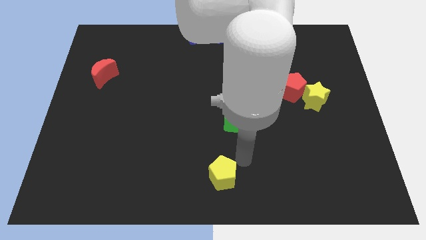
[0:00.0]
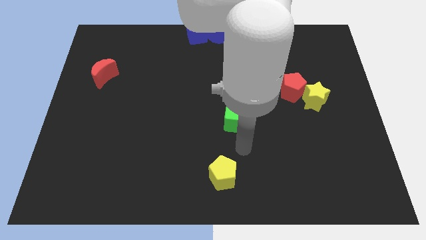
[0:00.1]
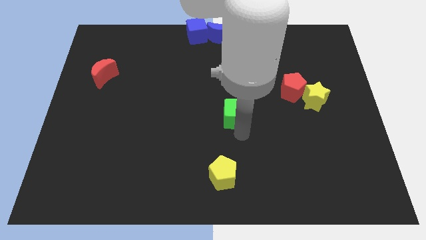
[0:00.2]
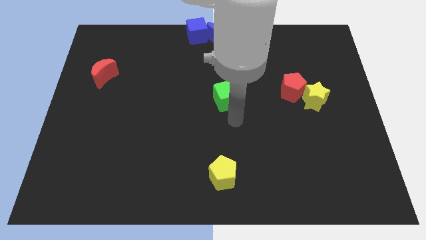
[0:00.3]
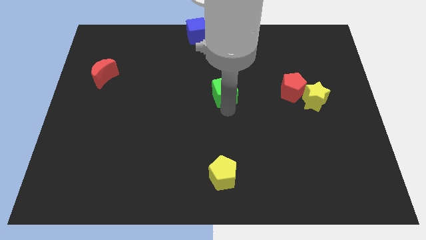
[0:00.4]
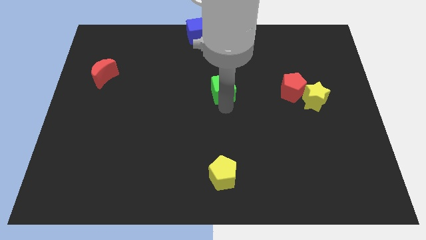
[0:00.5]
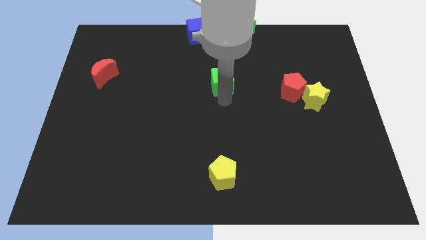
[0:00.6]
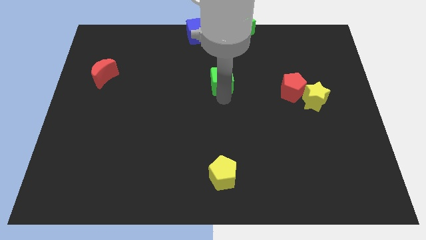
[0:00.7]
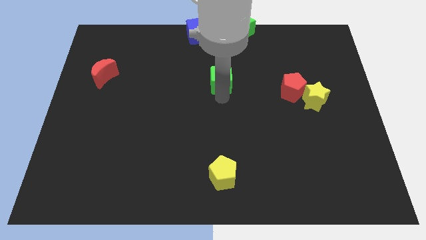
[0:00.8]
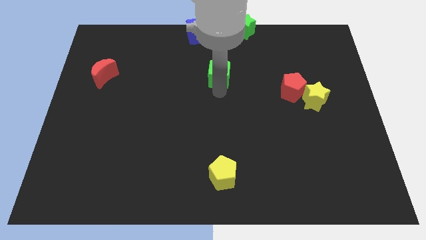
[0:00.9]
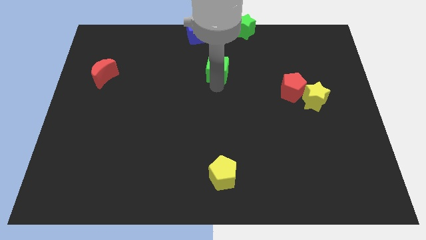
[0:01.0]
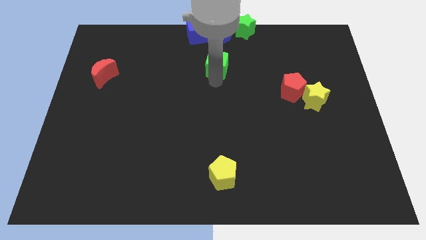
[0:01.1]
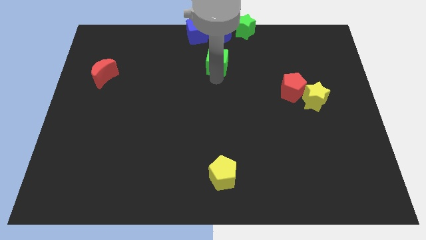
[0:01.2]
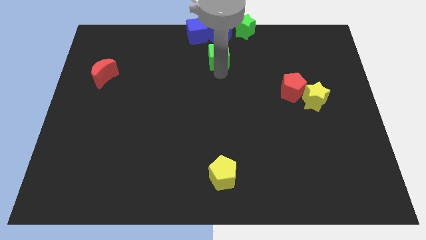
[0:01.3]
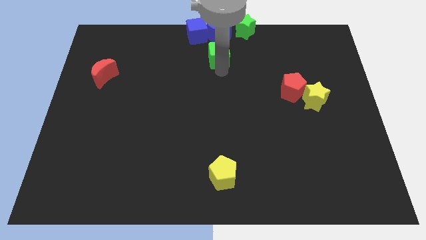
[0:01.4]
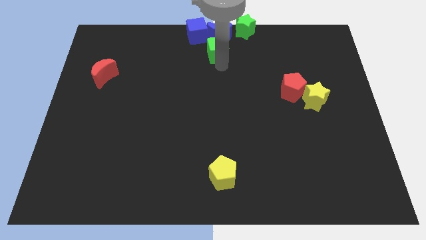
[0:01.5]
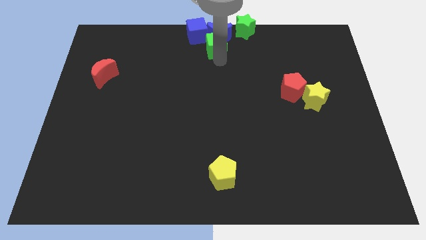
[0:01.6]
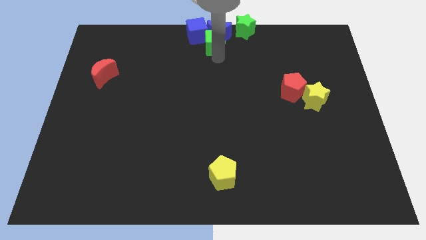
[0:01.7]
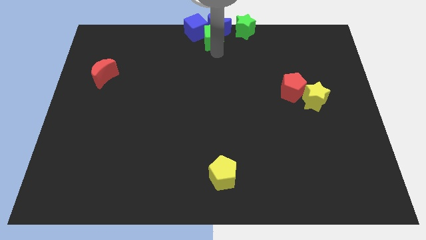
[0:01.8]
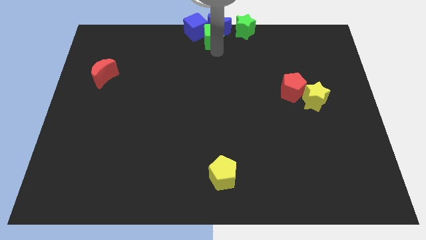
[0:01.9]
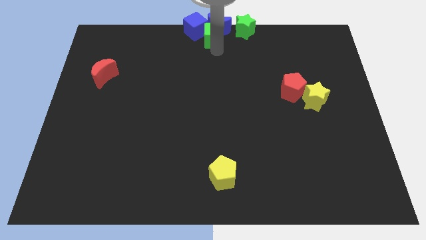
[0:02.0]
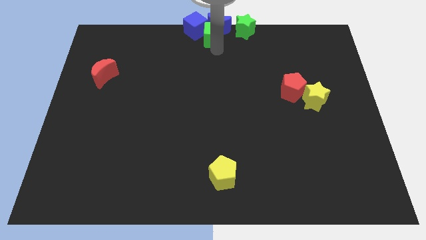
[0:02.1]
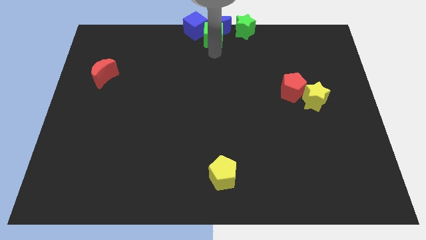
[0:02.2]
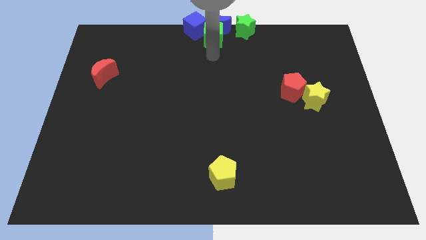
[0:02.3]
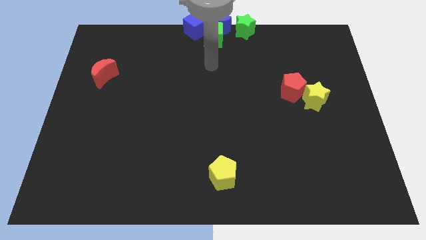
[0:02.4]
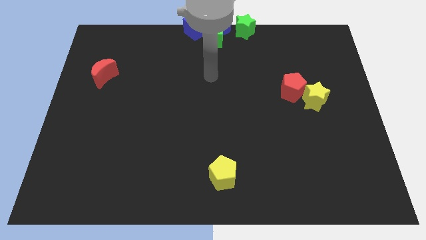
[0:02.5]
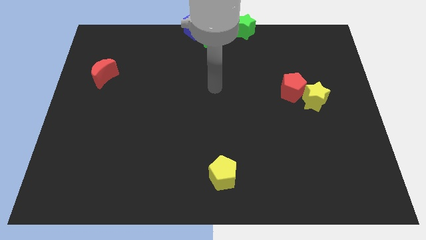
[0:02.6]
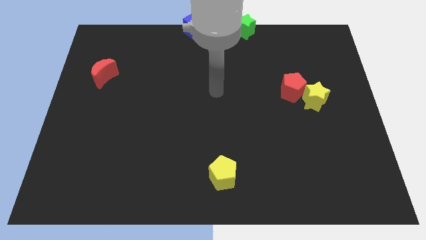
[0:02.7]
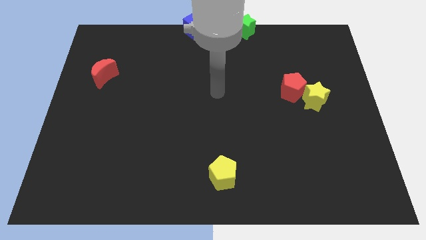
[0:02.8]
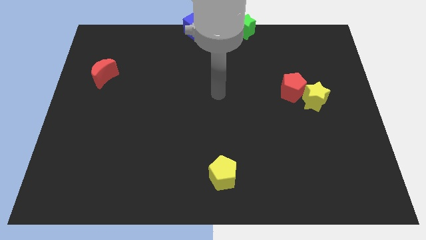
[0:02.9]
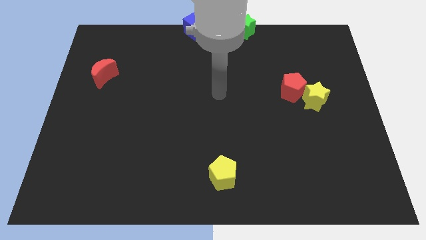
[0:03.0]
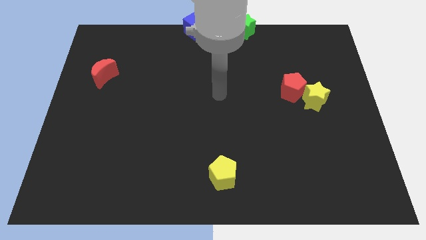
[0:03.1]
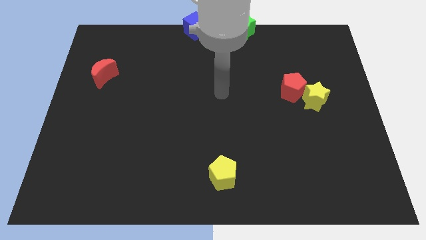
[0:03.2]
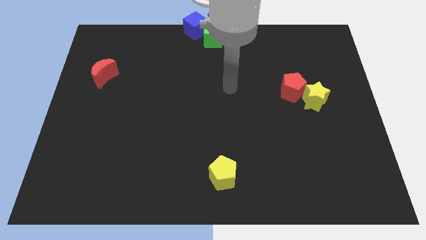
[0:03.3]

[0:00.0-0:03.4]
push the green cube into the blue blocks

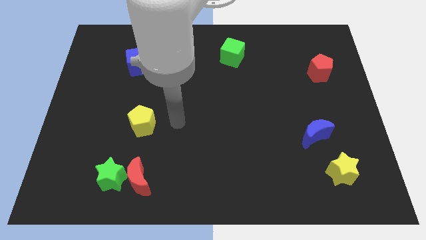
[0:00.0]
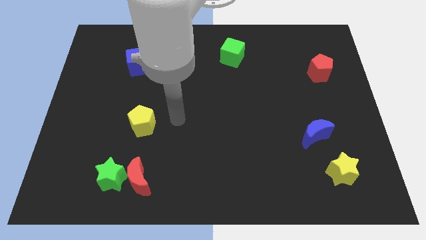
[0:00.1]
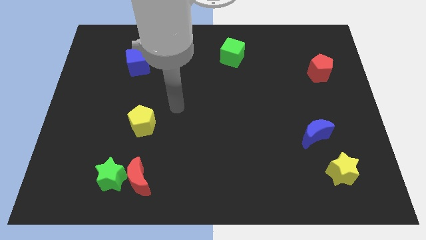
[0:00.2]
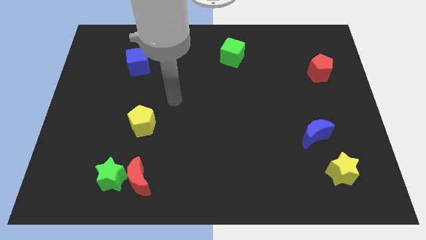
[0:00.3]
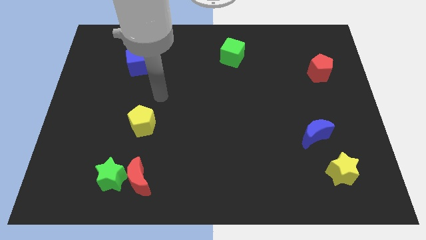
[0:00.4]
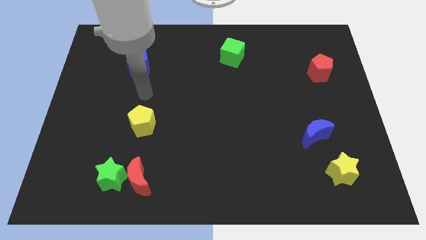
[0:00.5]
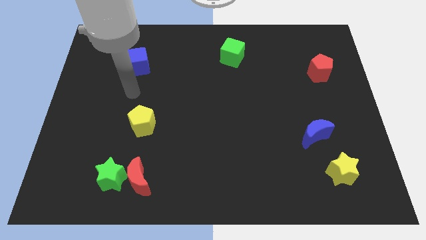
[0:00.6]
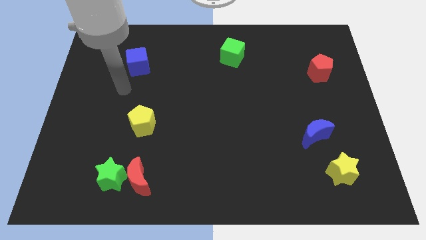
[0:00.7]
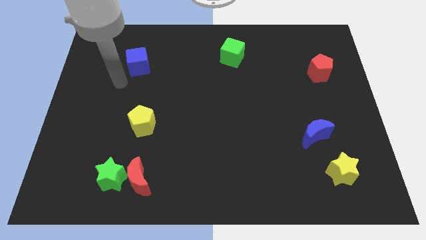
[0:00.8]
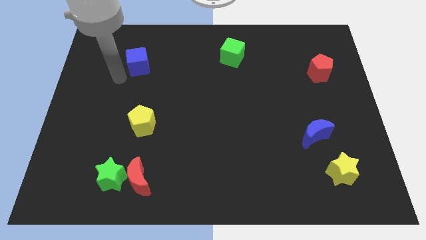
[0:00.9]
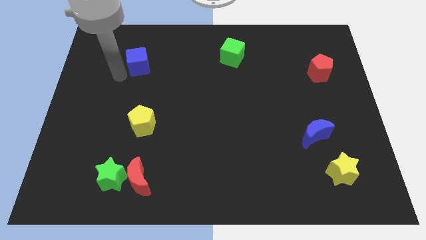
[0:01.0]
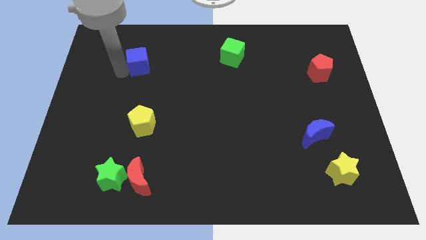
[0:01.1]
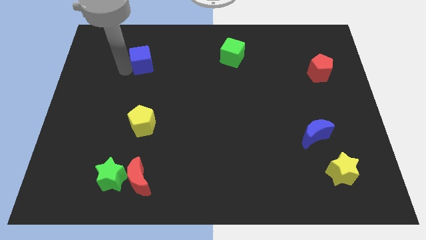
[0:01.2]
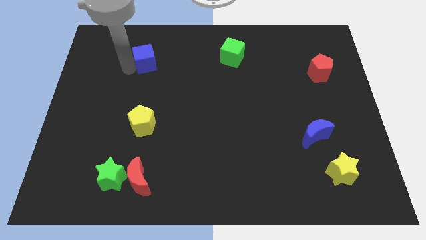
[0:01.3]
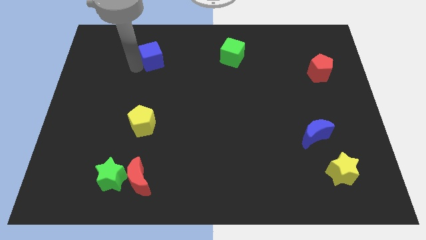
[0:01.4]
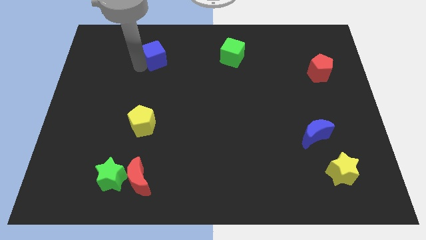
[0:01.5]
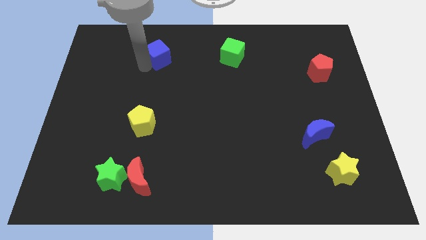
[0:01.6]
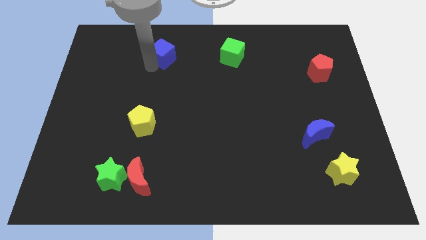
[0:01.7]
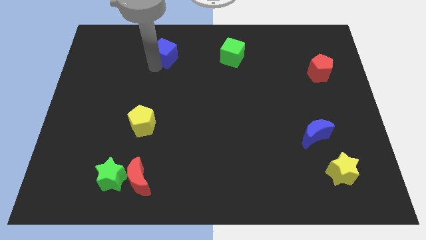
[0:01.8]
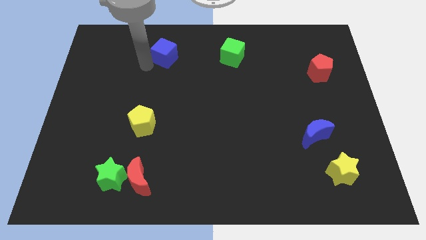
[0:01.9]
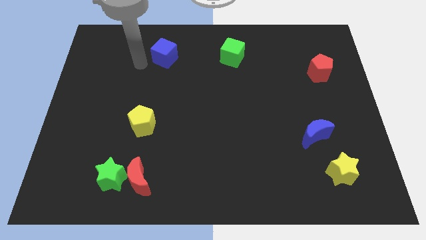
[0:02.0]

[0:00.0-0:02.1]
move the blue cube horizontally at the left side of the green cube

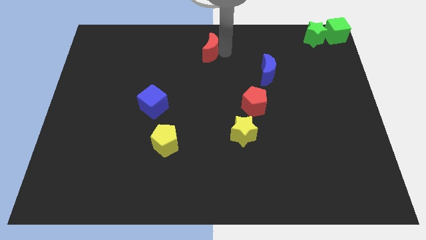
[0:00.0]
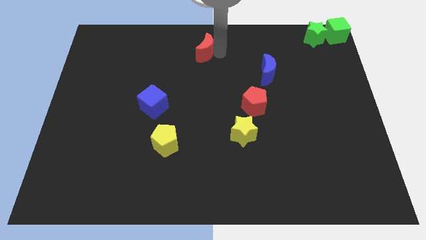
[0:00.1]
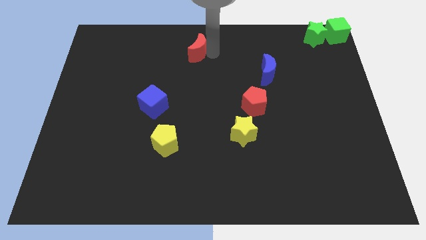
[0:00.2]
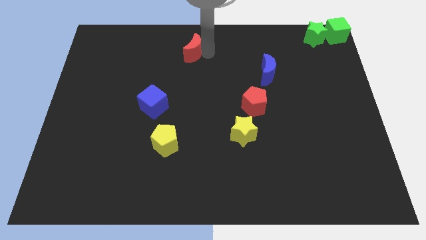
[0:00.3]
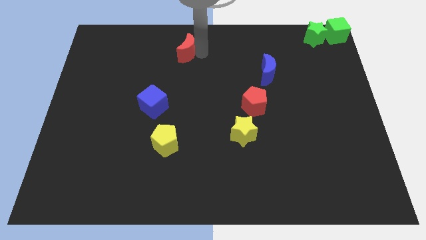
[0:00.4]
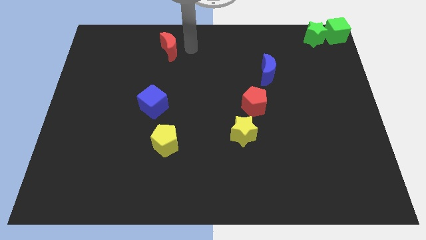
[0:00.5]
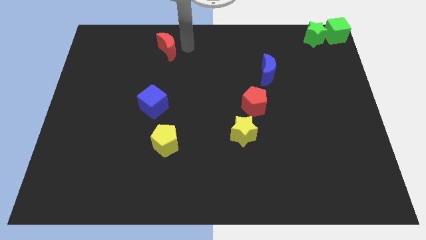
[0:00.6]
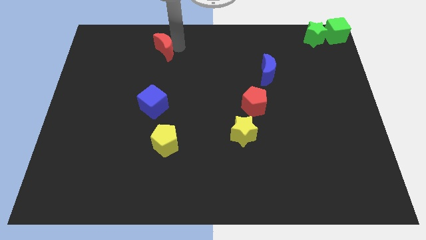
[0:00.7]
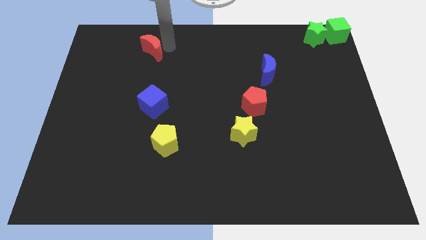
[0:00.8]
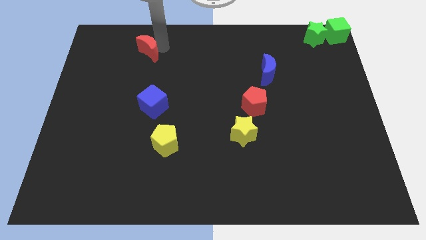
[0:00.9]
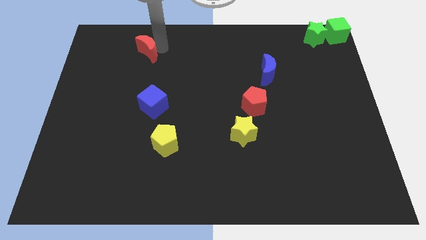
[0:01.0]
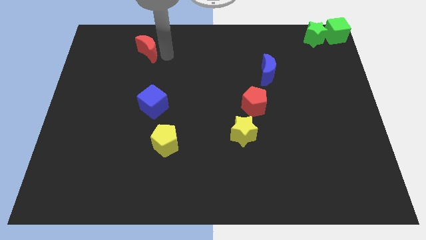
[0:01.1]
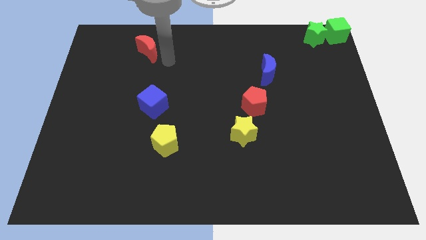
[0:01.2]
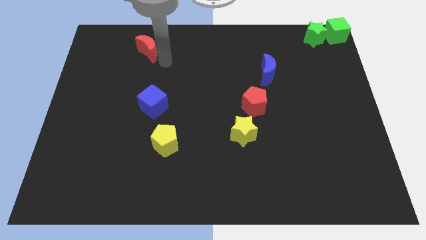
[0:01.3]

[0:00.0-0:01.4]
move the red crescent parallel to the top of the blue cube

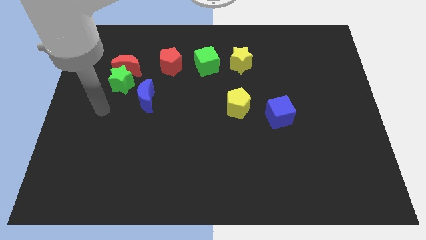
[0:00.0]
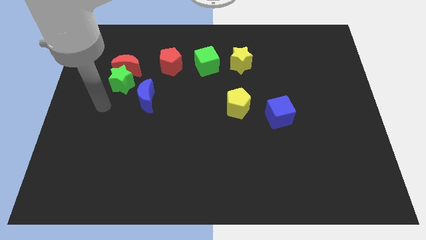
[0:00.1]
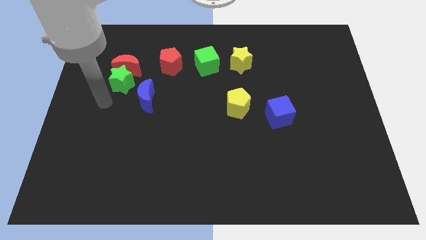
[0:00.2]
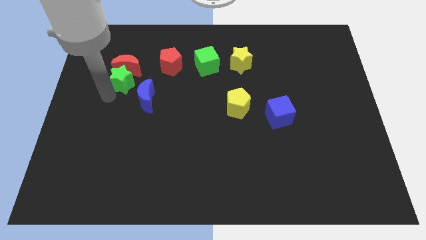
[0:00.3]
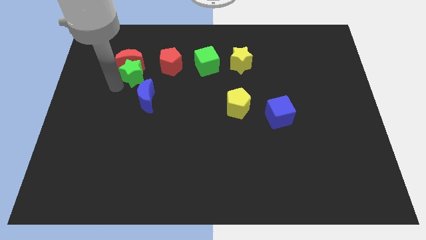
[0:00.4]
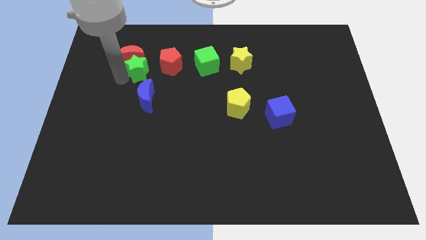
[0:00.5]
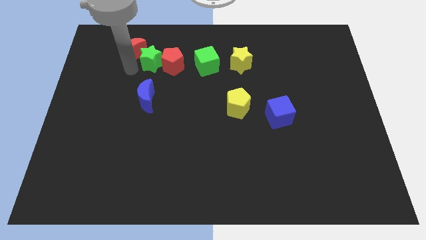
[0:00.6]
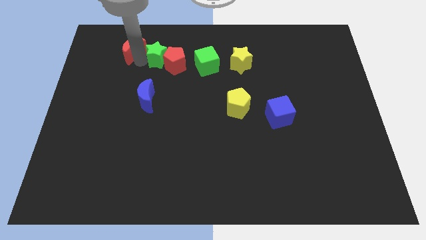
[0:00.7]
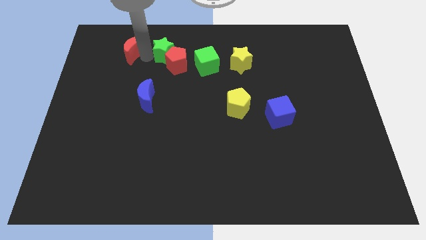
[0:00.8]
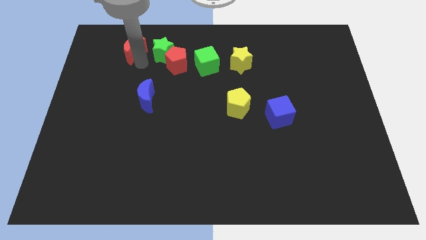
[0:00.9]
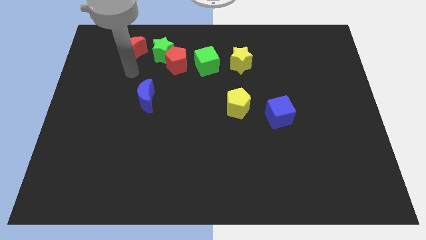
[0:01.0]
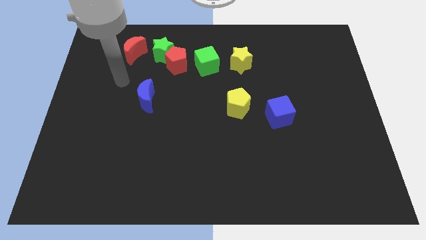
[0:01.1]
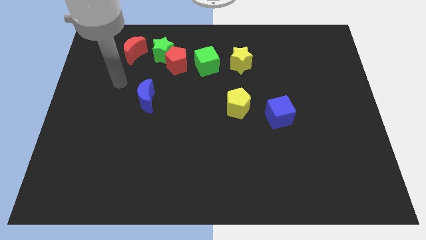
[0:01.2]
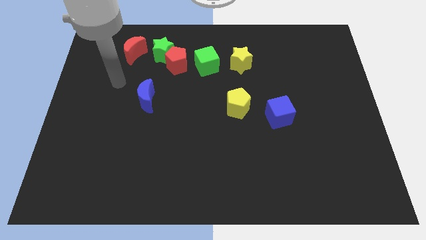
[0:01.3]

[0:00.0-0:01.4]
push the green star slightly towards the top side of the red pentagon

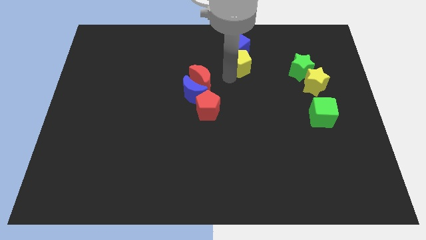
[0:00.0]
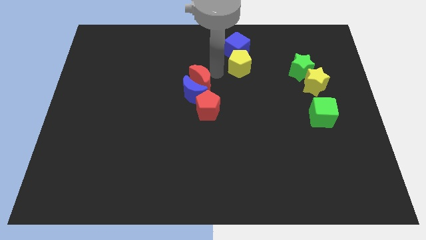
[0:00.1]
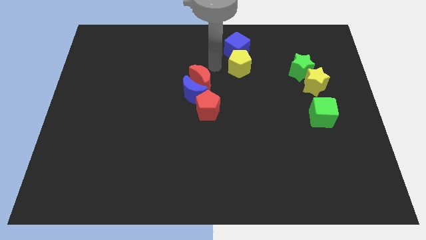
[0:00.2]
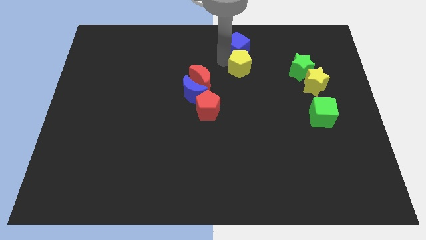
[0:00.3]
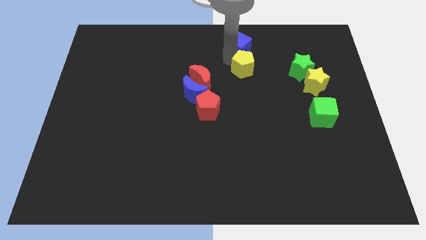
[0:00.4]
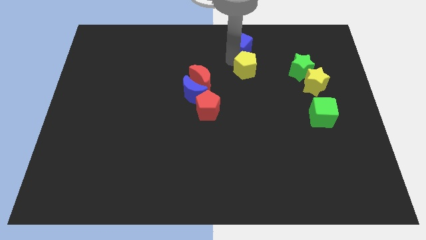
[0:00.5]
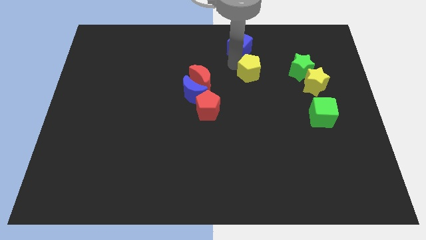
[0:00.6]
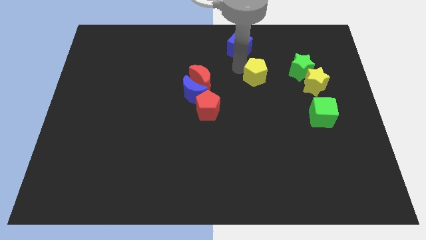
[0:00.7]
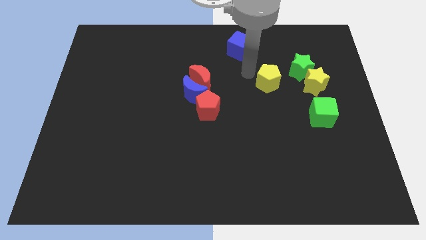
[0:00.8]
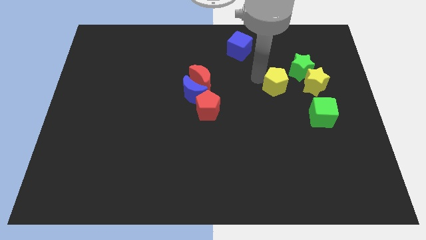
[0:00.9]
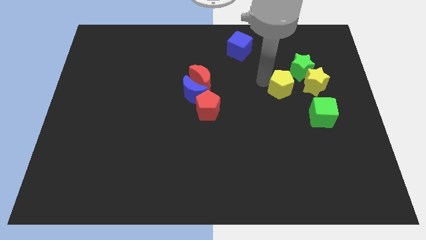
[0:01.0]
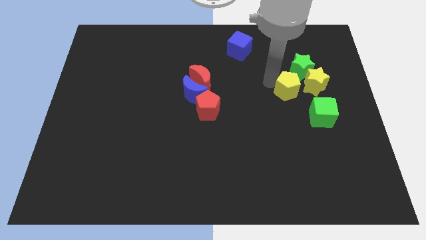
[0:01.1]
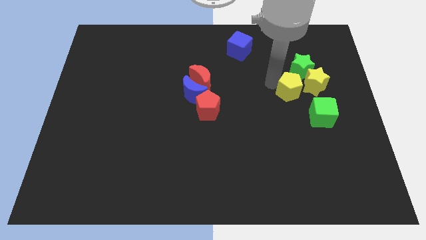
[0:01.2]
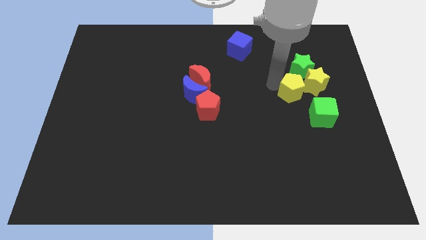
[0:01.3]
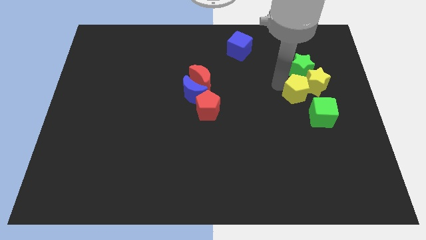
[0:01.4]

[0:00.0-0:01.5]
separate yellow pentagon and blue cube
